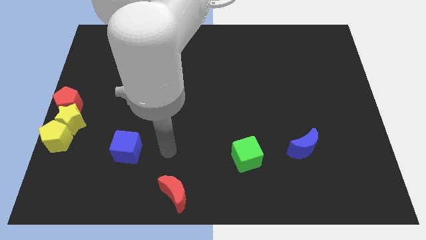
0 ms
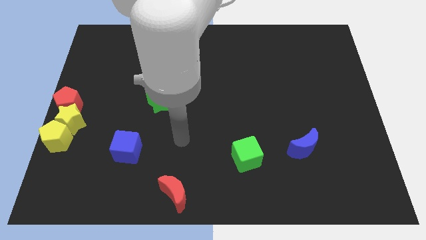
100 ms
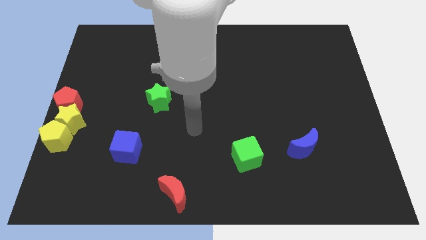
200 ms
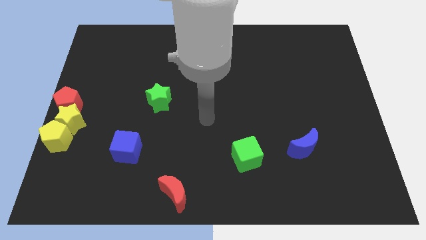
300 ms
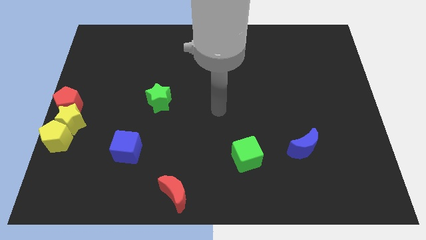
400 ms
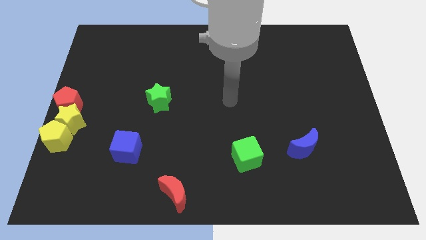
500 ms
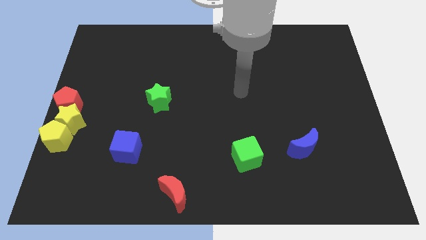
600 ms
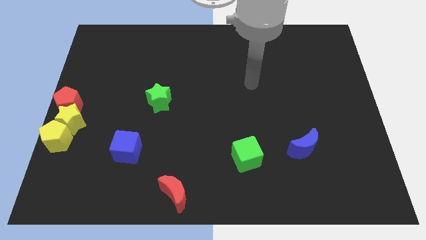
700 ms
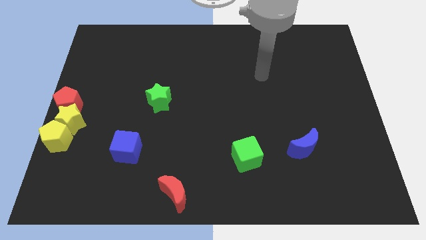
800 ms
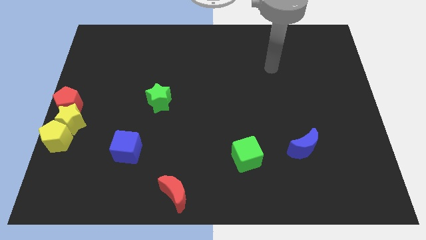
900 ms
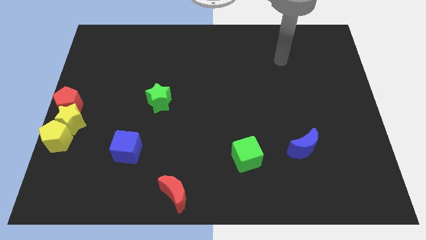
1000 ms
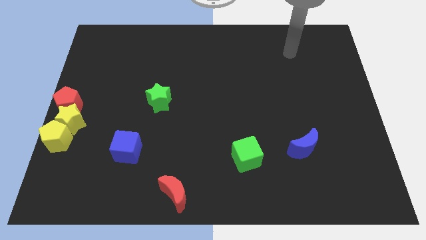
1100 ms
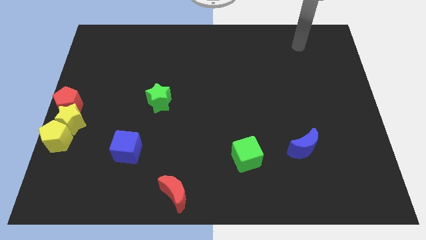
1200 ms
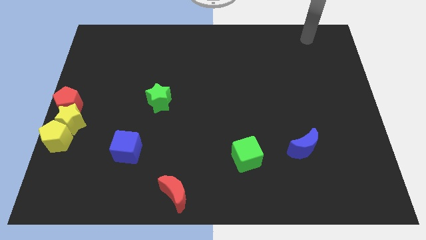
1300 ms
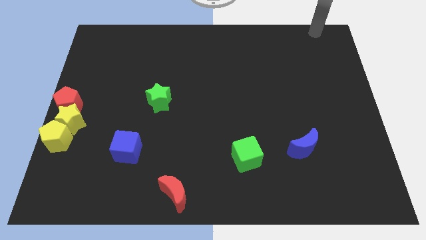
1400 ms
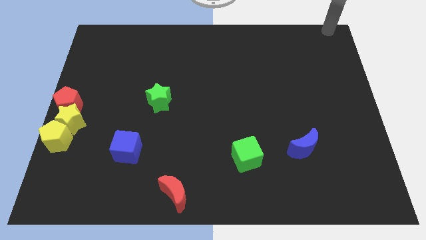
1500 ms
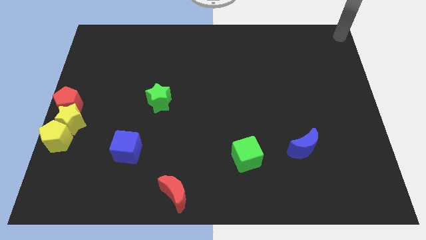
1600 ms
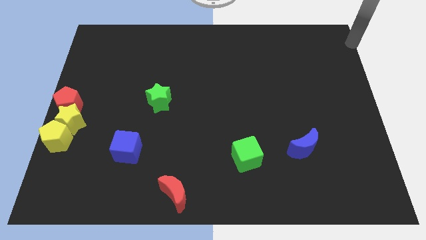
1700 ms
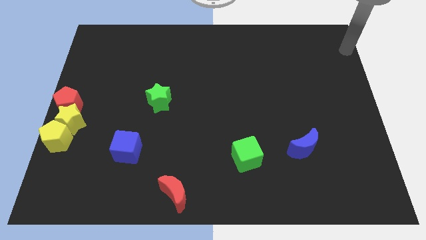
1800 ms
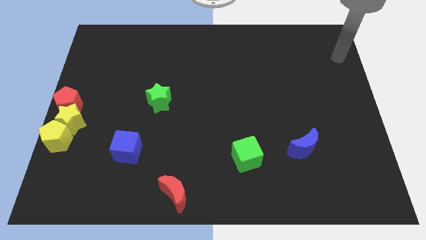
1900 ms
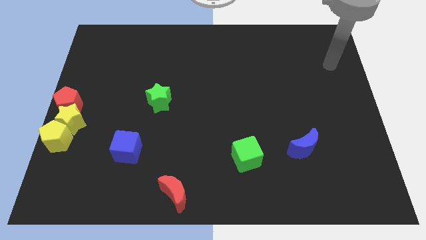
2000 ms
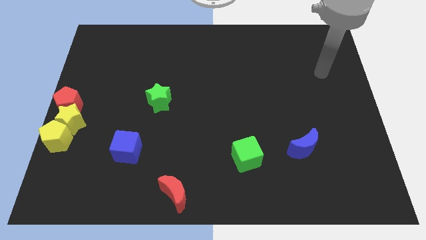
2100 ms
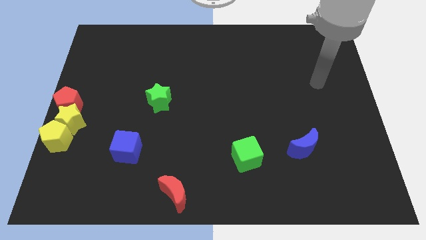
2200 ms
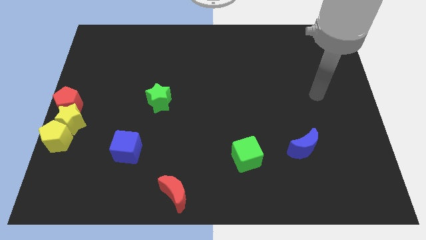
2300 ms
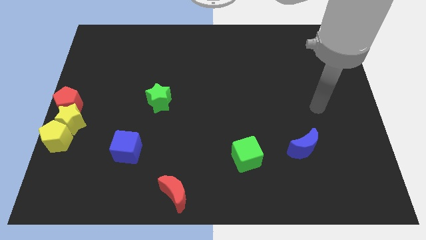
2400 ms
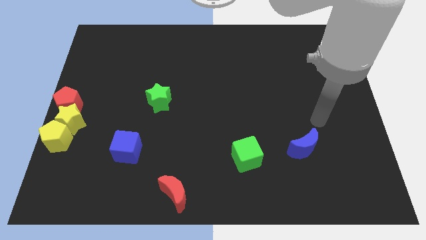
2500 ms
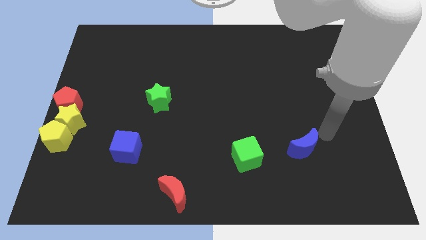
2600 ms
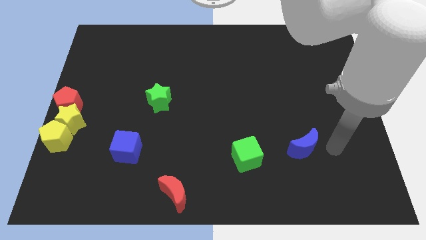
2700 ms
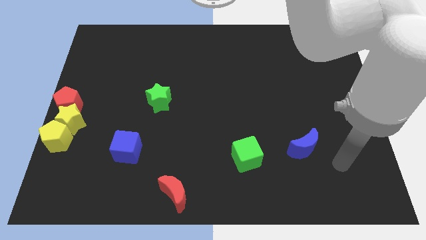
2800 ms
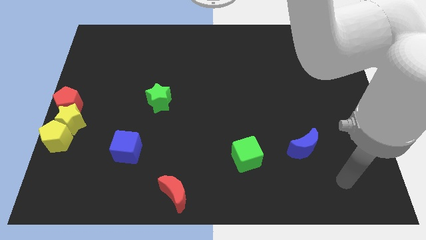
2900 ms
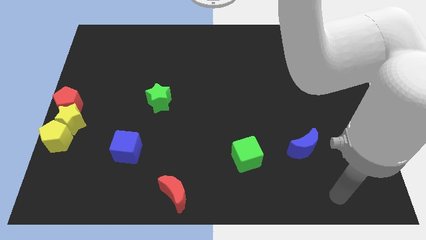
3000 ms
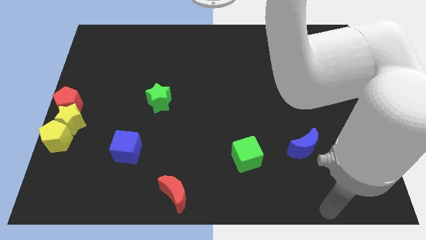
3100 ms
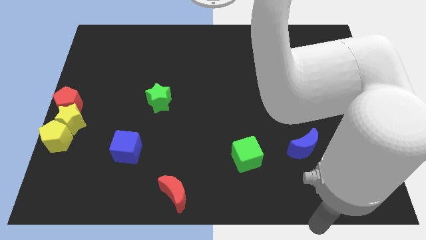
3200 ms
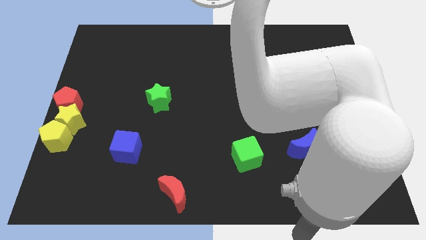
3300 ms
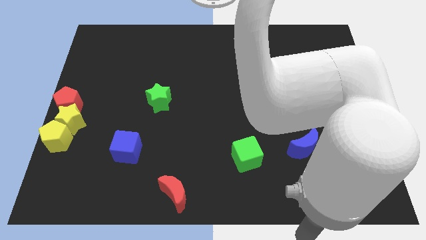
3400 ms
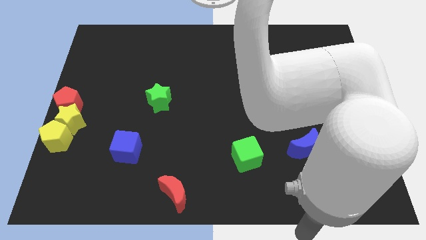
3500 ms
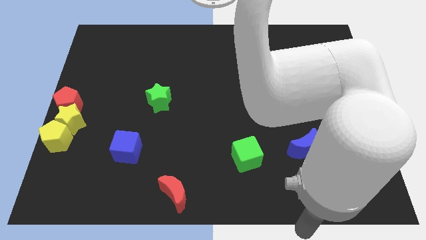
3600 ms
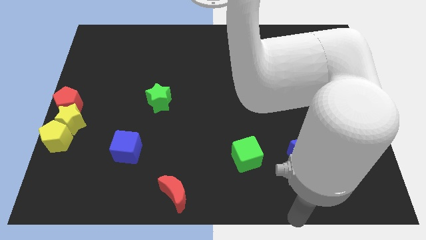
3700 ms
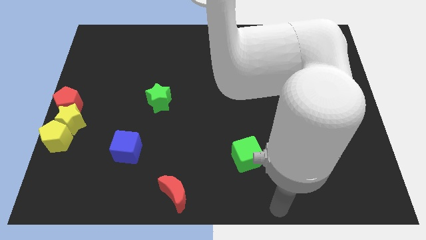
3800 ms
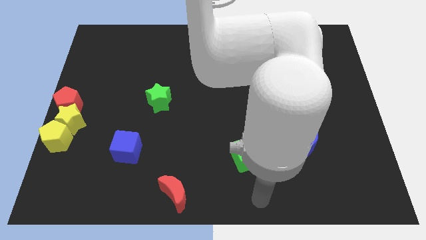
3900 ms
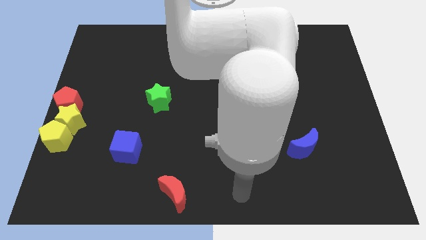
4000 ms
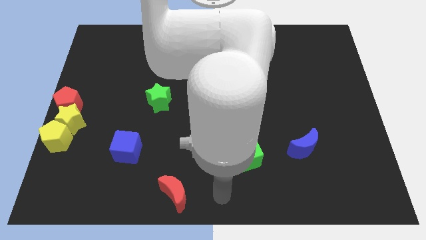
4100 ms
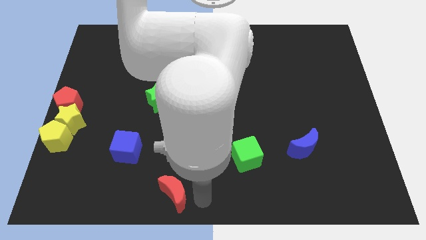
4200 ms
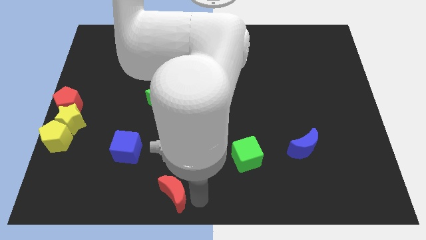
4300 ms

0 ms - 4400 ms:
point the arm to the right of the red moon

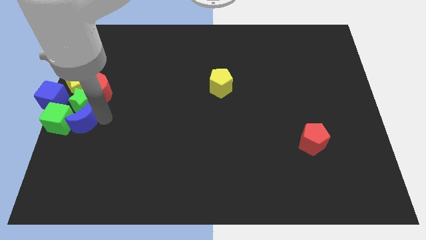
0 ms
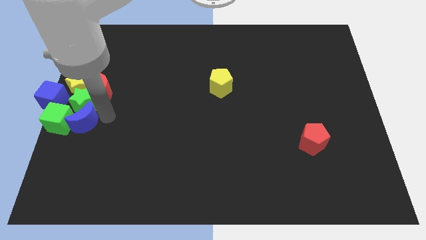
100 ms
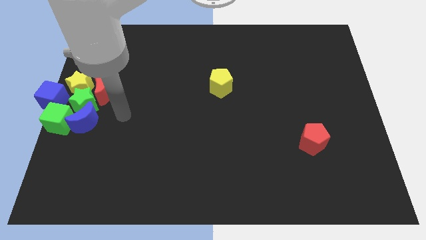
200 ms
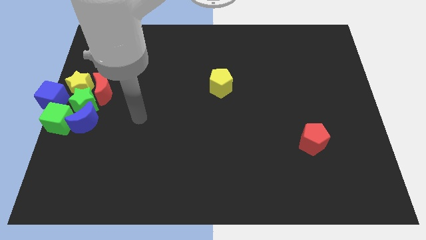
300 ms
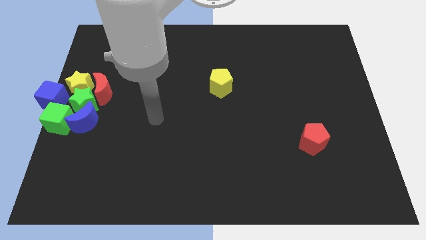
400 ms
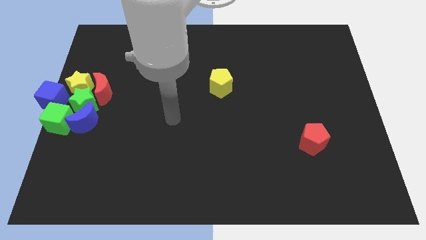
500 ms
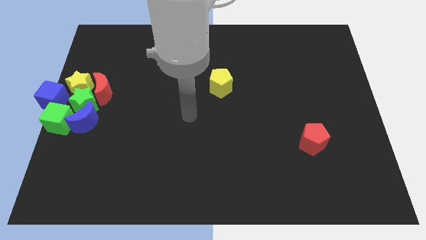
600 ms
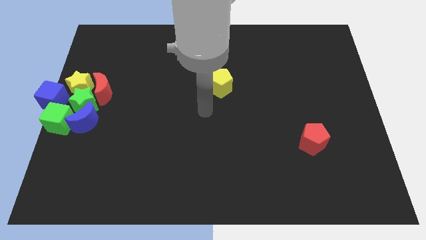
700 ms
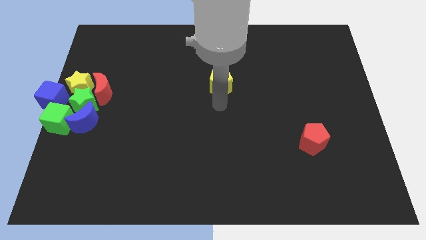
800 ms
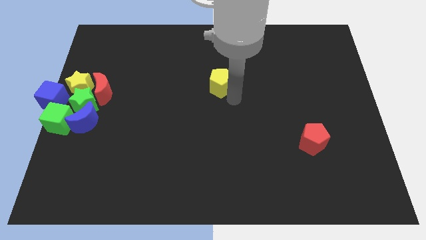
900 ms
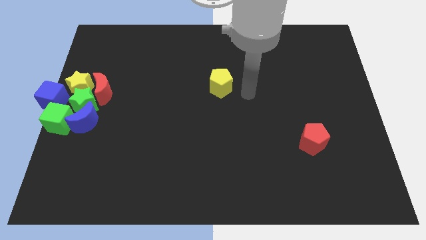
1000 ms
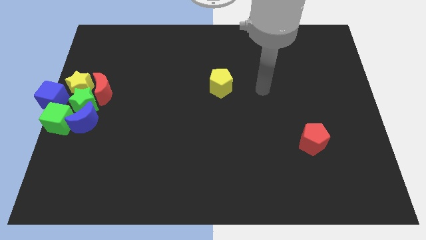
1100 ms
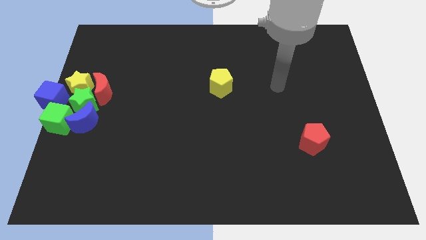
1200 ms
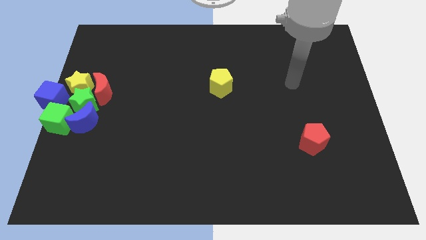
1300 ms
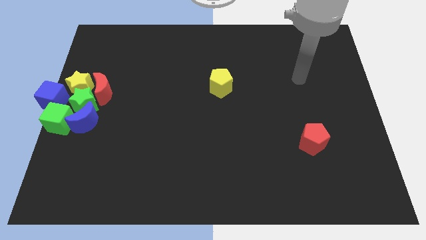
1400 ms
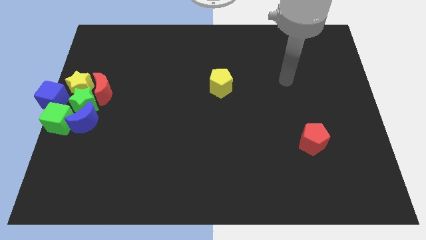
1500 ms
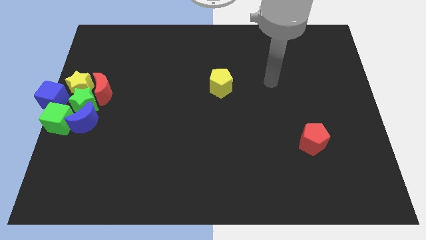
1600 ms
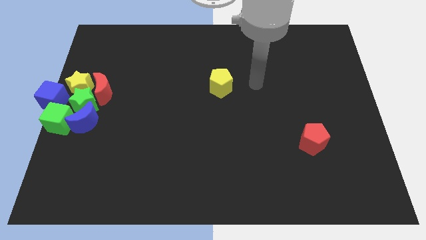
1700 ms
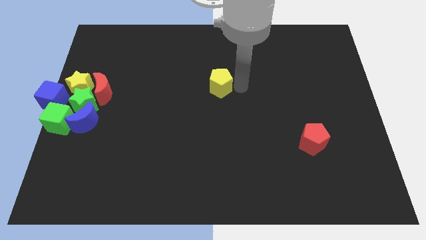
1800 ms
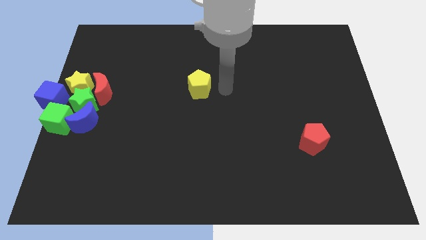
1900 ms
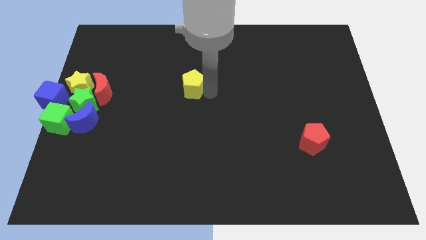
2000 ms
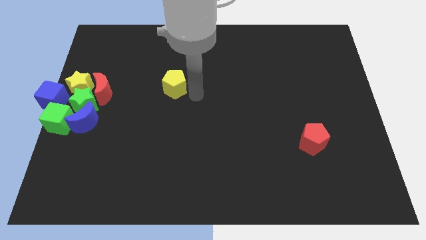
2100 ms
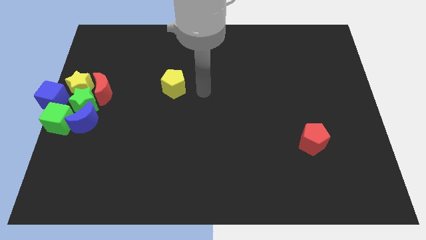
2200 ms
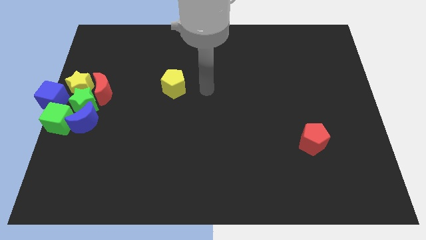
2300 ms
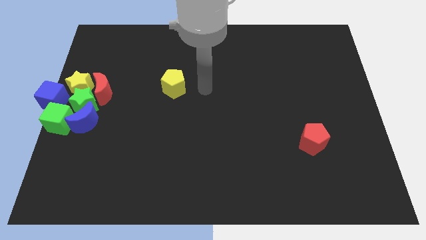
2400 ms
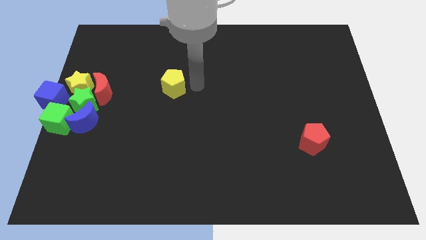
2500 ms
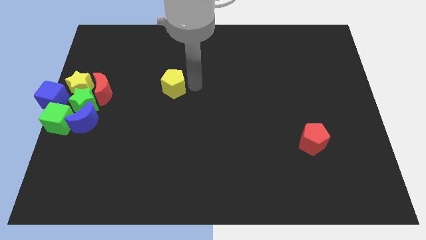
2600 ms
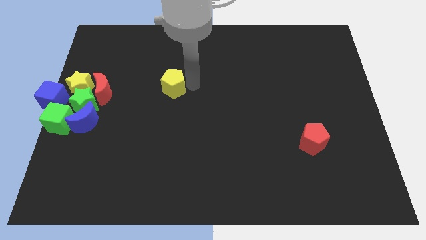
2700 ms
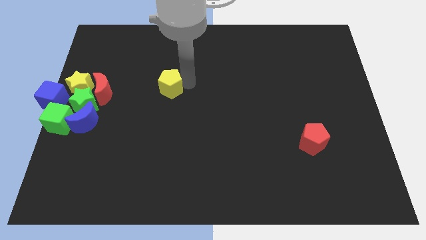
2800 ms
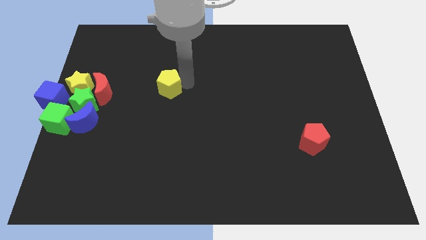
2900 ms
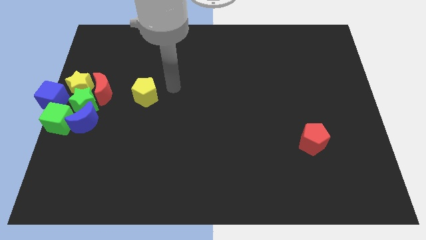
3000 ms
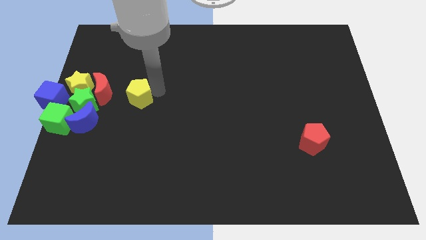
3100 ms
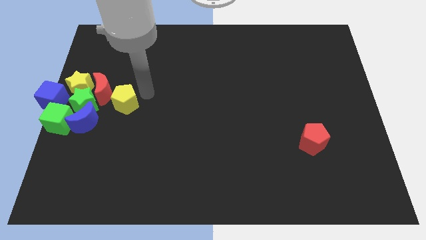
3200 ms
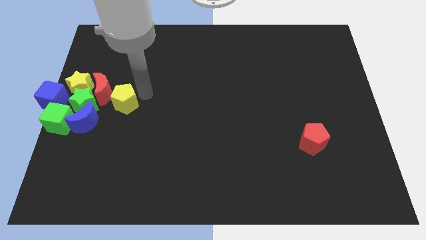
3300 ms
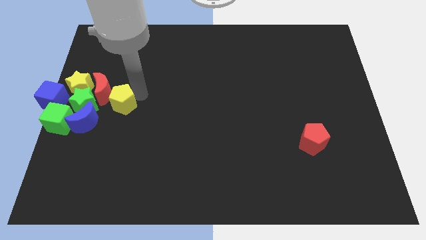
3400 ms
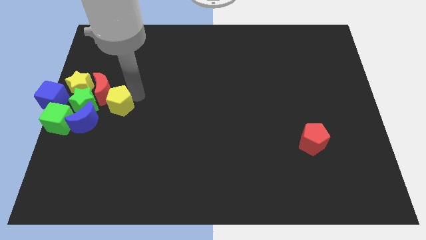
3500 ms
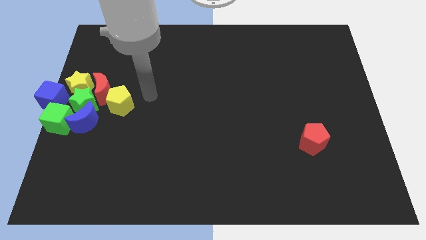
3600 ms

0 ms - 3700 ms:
push the yellow pentagon towards the group of blocks

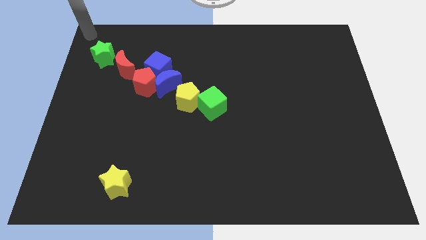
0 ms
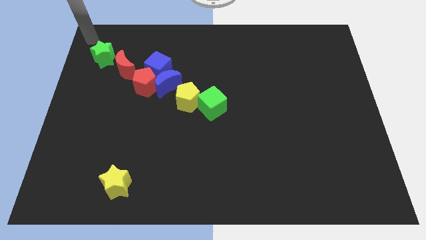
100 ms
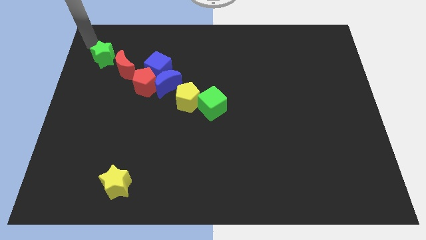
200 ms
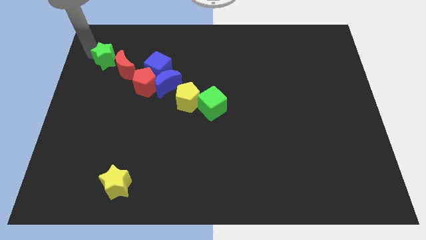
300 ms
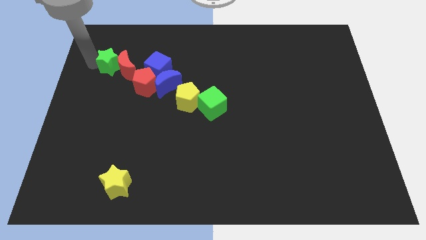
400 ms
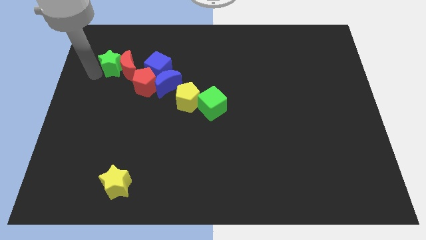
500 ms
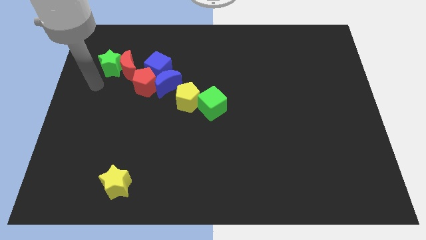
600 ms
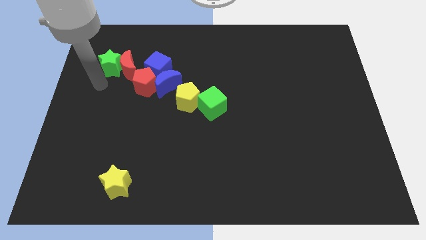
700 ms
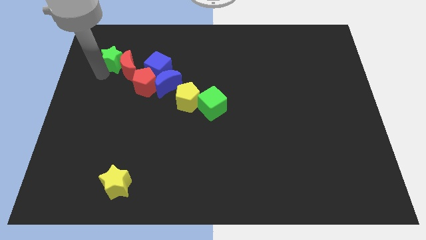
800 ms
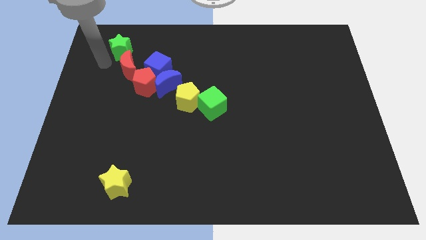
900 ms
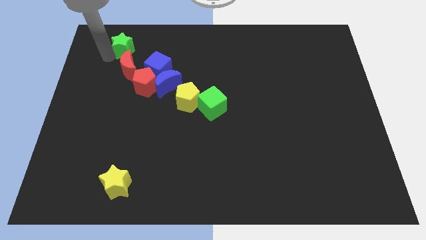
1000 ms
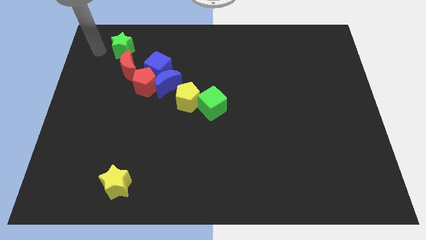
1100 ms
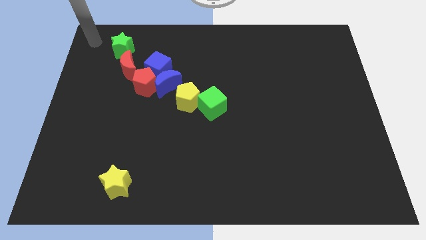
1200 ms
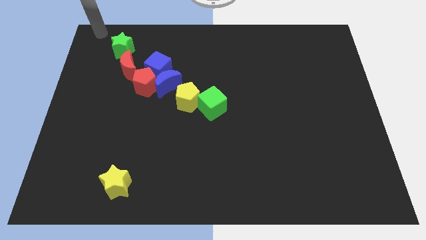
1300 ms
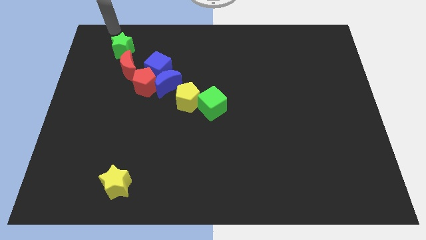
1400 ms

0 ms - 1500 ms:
push the green star to the top of the red crescent
